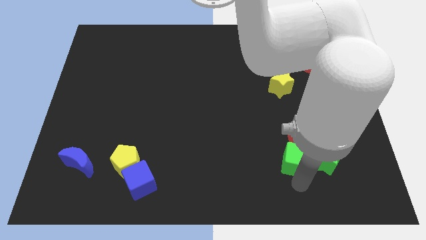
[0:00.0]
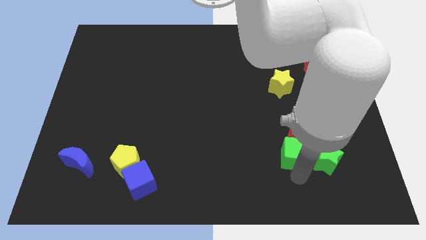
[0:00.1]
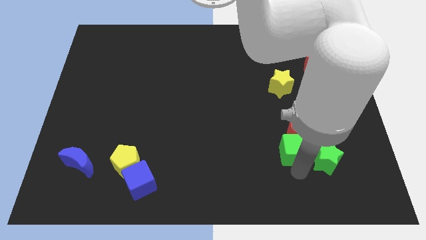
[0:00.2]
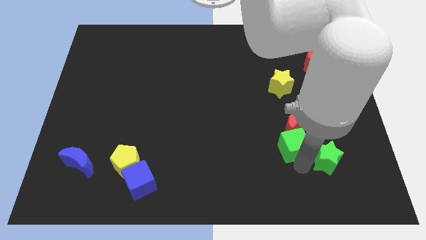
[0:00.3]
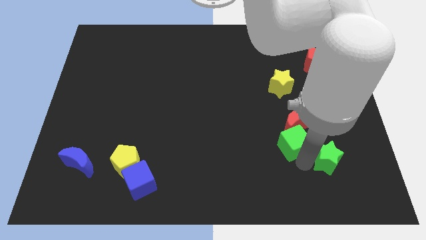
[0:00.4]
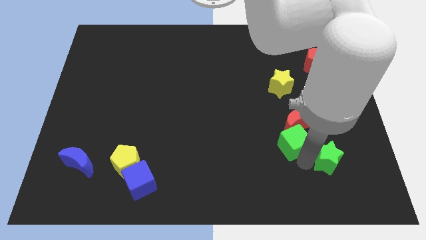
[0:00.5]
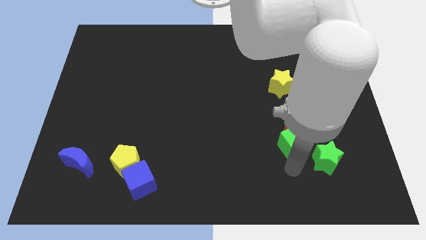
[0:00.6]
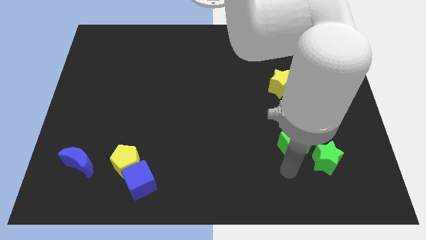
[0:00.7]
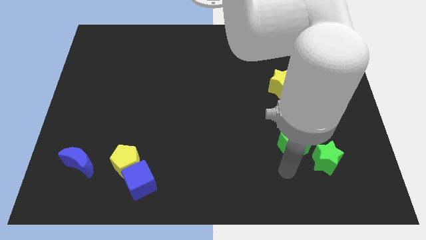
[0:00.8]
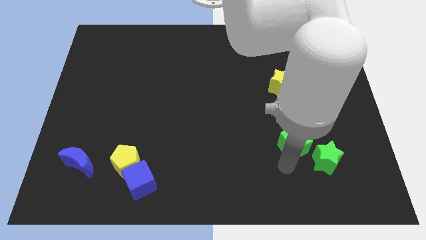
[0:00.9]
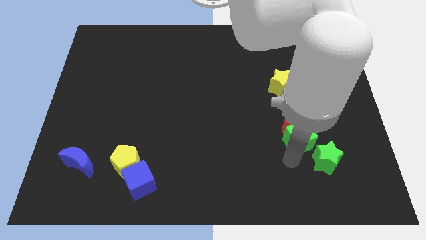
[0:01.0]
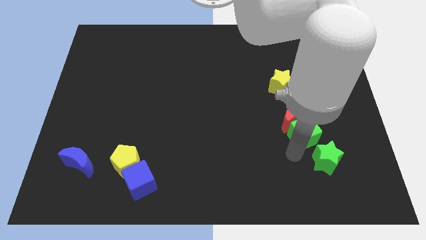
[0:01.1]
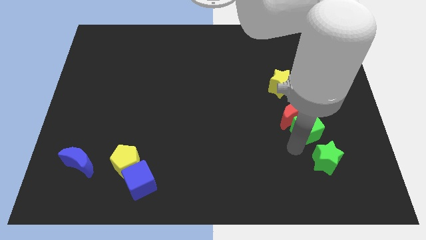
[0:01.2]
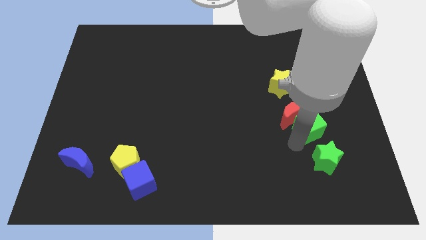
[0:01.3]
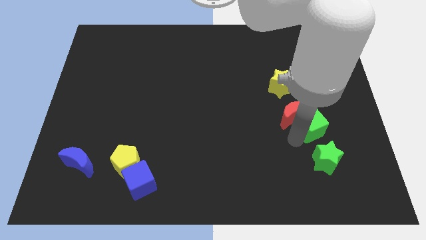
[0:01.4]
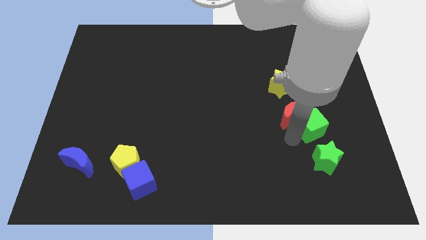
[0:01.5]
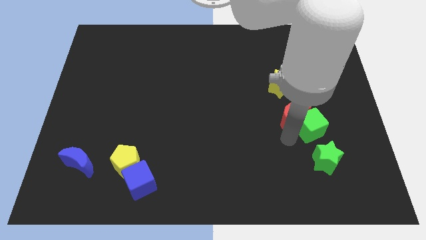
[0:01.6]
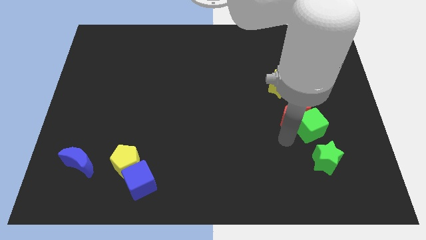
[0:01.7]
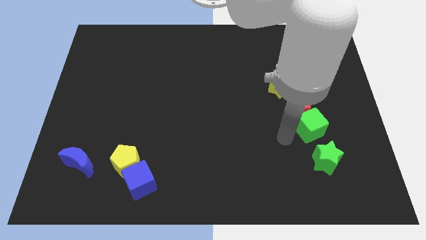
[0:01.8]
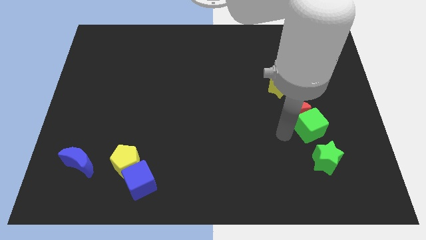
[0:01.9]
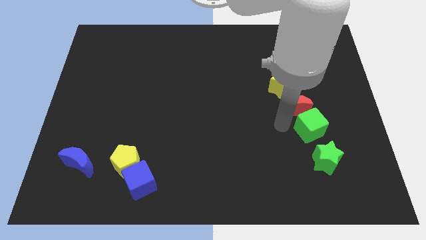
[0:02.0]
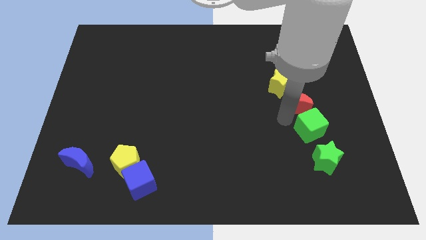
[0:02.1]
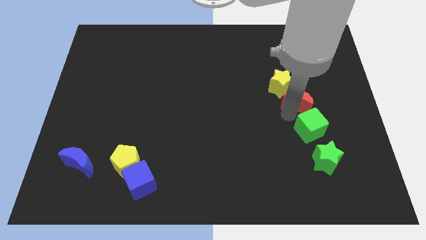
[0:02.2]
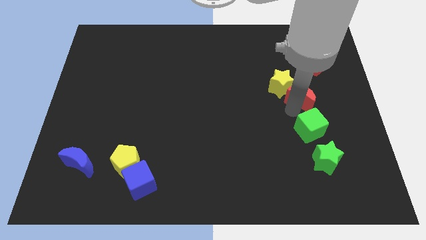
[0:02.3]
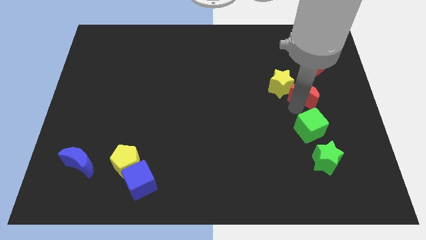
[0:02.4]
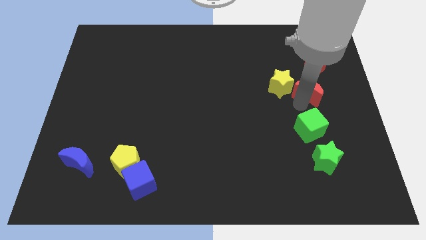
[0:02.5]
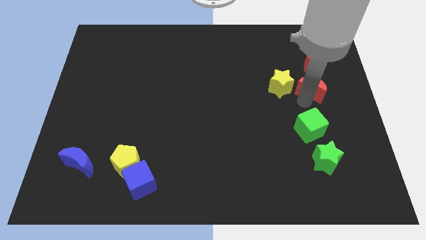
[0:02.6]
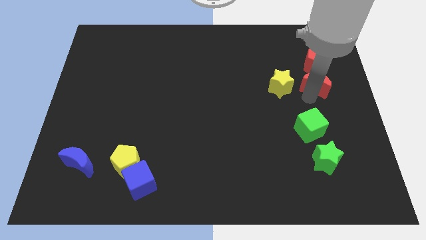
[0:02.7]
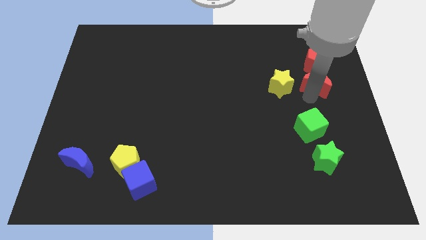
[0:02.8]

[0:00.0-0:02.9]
push red crescent diagonally above red pentagon

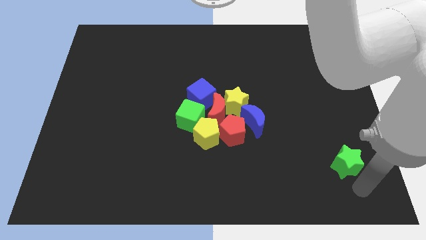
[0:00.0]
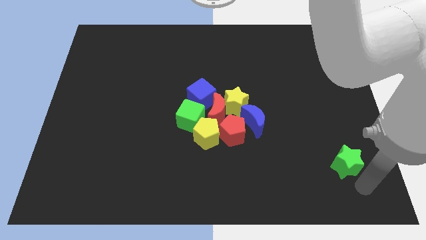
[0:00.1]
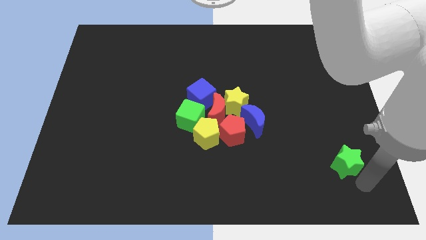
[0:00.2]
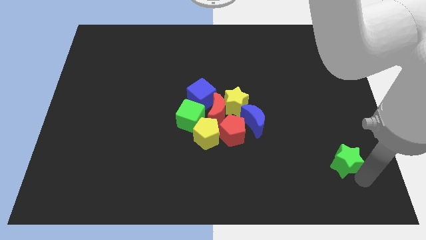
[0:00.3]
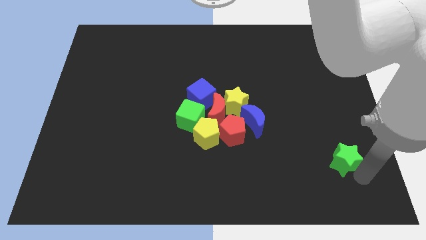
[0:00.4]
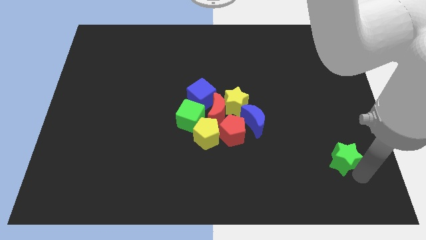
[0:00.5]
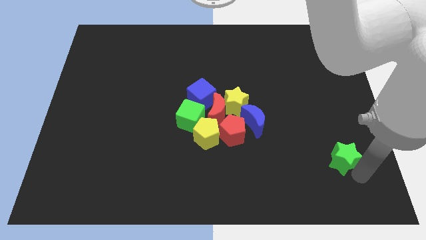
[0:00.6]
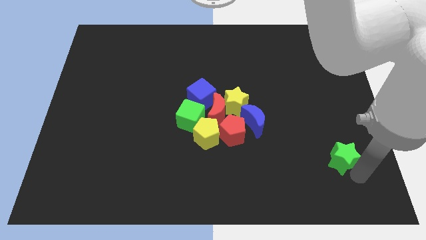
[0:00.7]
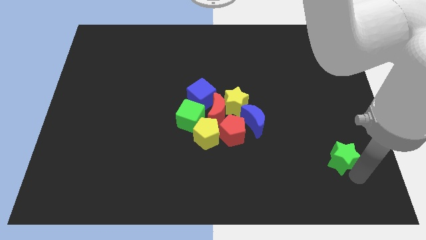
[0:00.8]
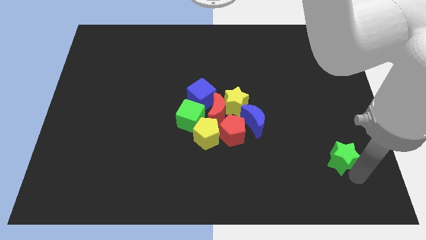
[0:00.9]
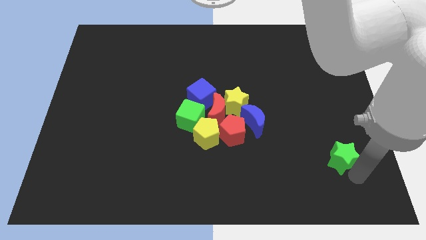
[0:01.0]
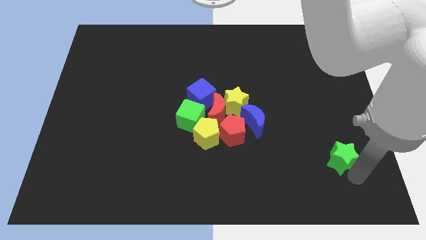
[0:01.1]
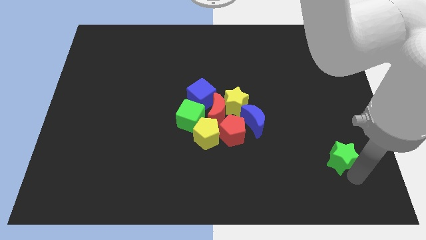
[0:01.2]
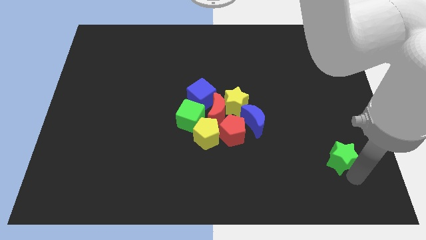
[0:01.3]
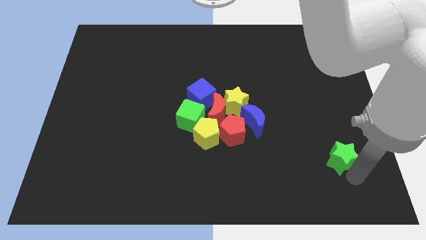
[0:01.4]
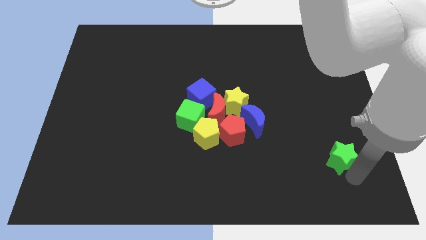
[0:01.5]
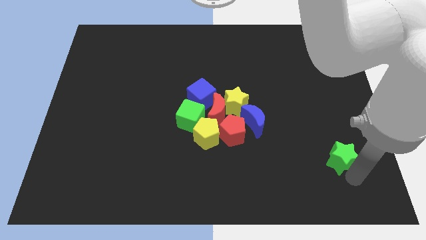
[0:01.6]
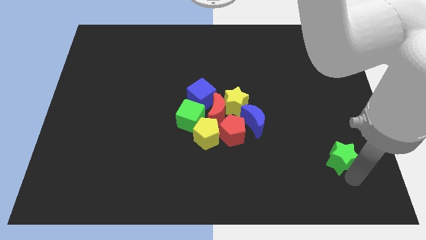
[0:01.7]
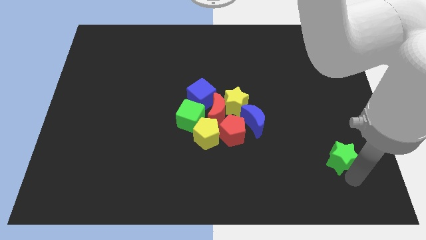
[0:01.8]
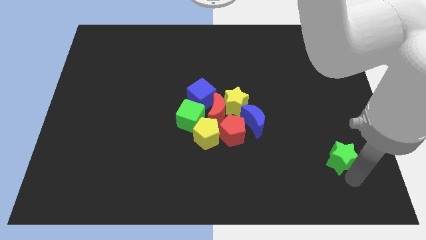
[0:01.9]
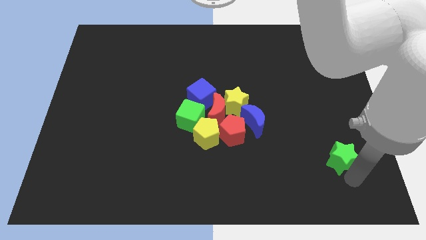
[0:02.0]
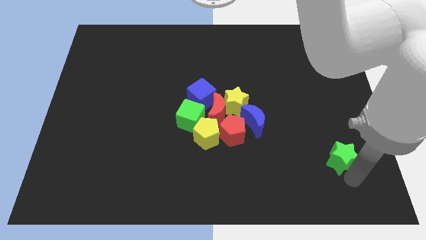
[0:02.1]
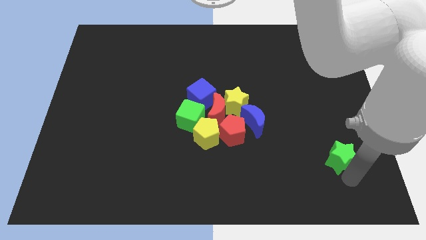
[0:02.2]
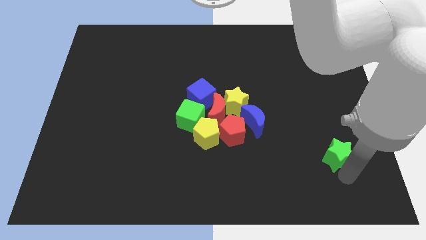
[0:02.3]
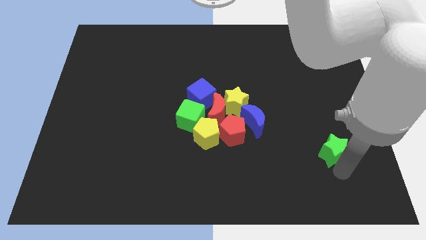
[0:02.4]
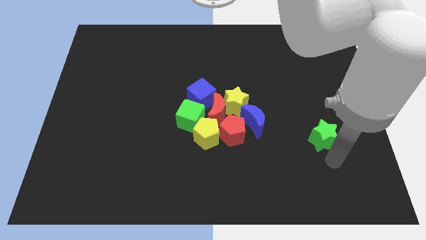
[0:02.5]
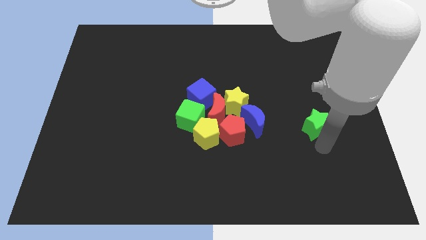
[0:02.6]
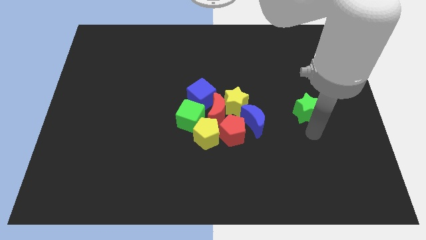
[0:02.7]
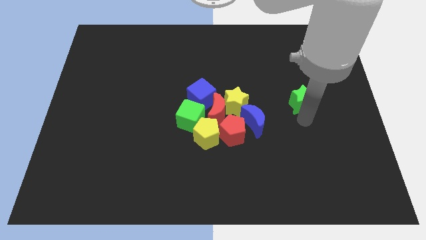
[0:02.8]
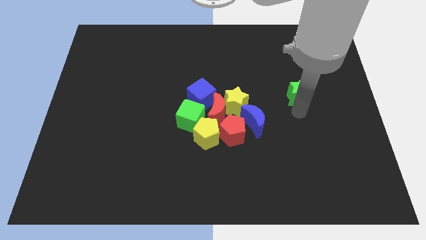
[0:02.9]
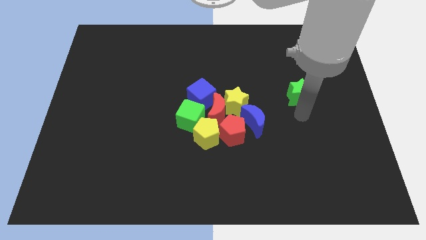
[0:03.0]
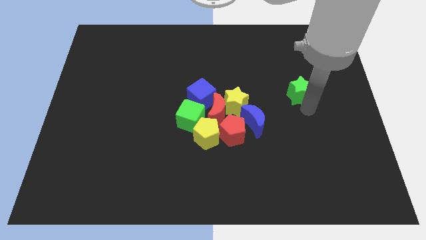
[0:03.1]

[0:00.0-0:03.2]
move the green star slightly towards up

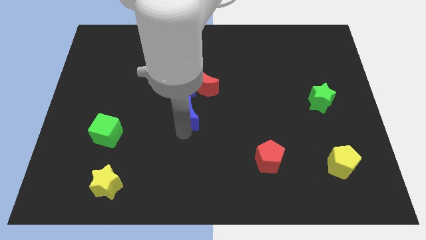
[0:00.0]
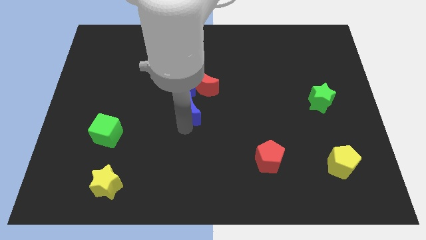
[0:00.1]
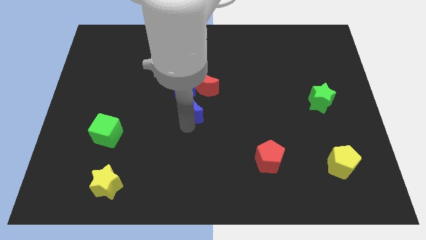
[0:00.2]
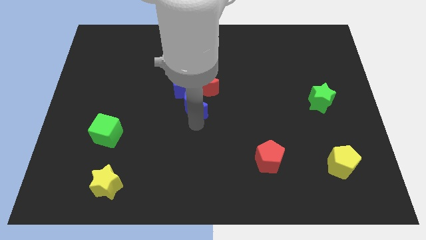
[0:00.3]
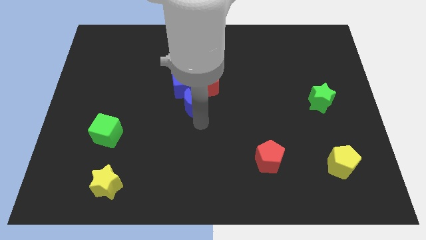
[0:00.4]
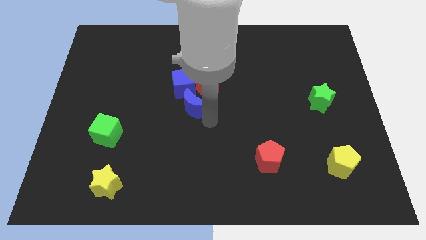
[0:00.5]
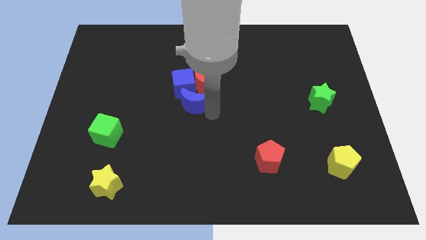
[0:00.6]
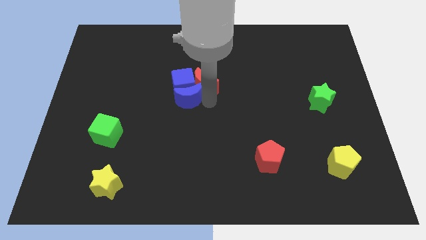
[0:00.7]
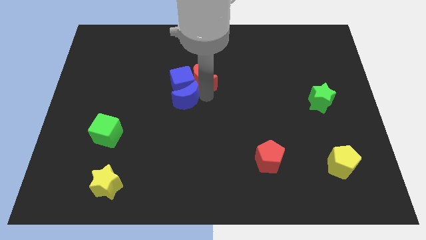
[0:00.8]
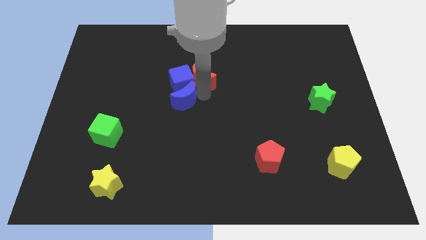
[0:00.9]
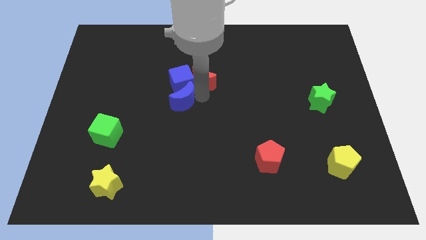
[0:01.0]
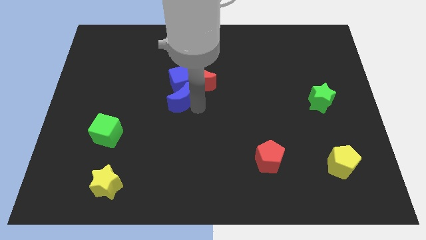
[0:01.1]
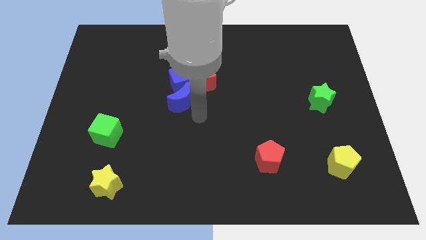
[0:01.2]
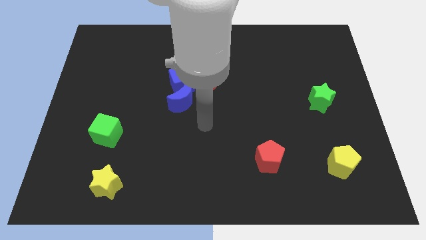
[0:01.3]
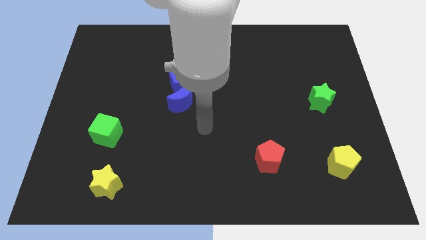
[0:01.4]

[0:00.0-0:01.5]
push the blue crescent close to the blue cube

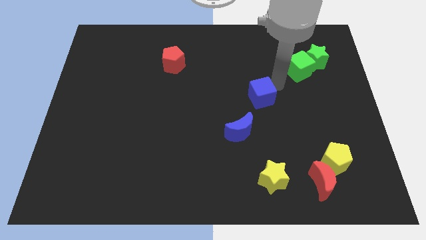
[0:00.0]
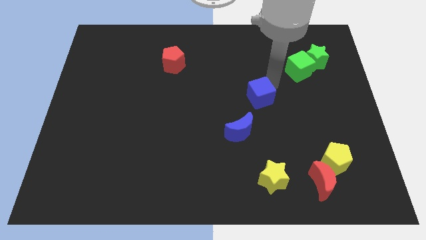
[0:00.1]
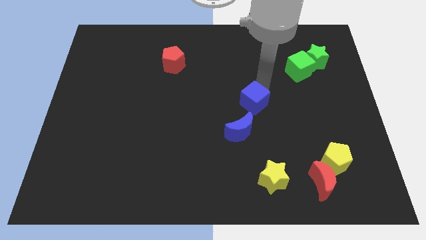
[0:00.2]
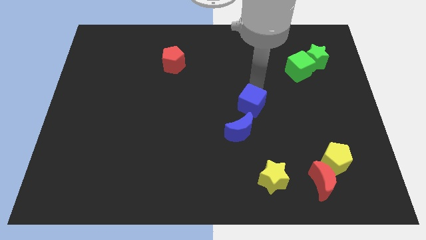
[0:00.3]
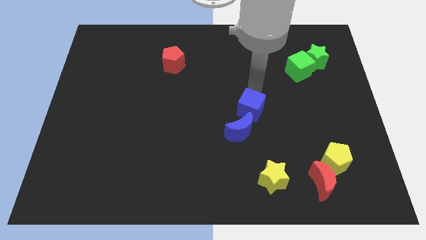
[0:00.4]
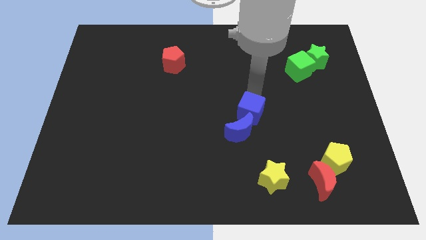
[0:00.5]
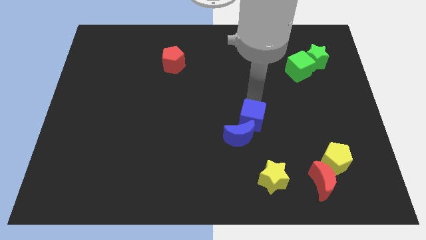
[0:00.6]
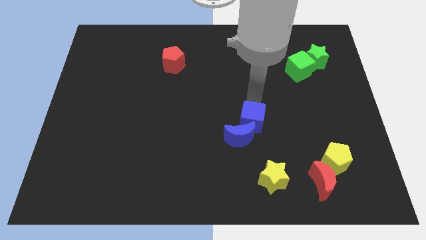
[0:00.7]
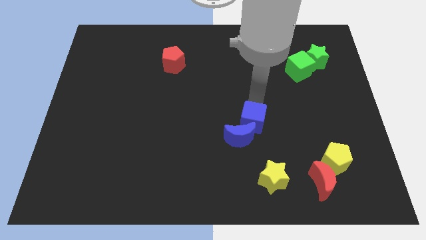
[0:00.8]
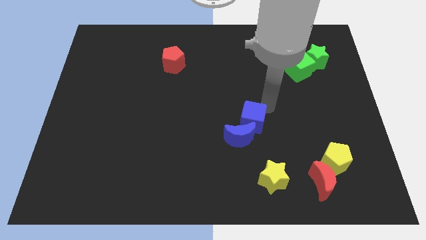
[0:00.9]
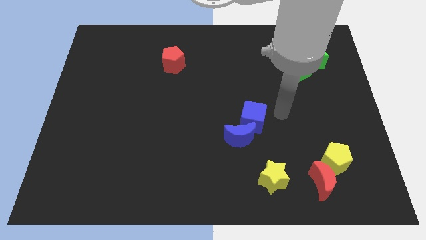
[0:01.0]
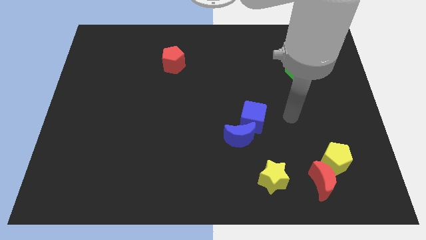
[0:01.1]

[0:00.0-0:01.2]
move the blue cube into the blue moon

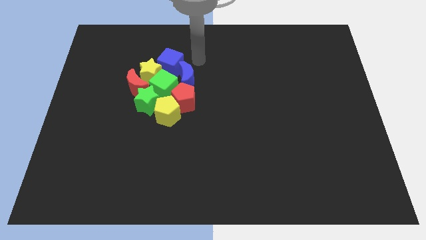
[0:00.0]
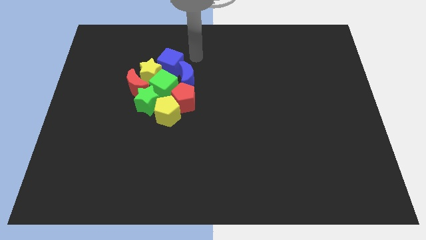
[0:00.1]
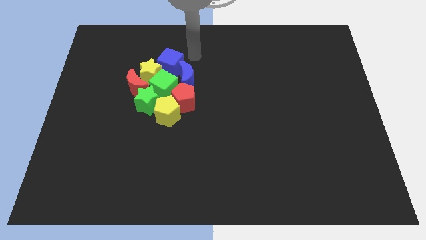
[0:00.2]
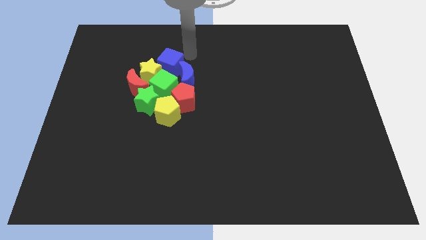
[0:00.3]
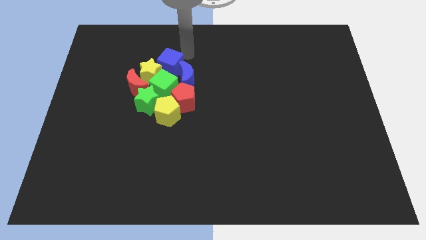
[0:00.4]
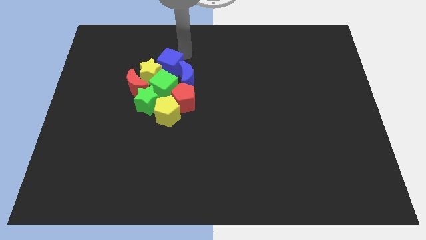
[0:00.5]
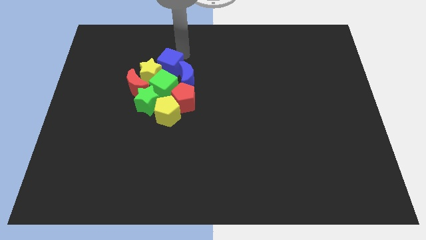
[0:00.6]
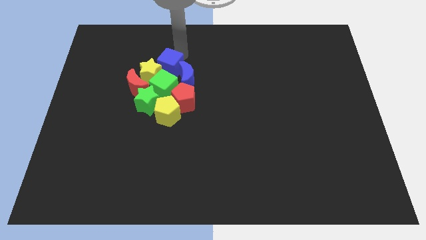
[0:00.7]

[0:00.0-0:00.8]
move the arm away from the blue crescent
